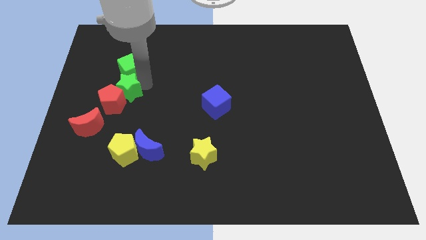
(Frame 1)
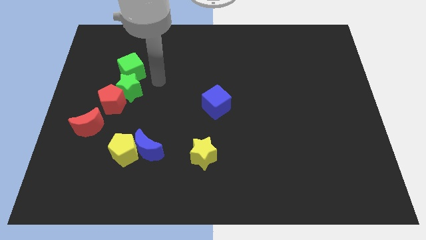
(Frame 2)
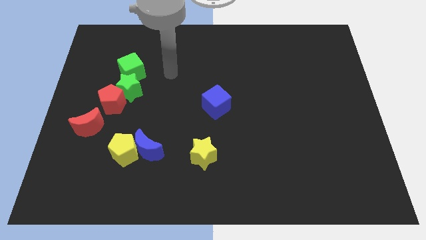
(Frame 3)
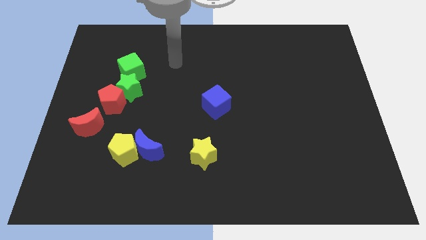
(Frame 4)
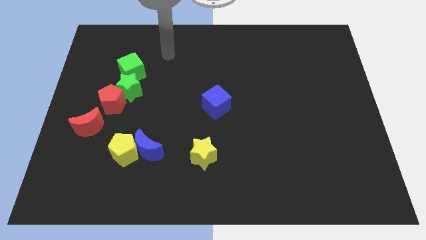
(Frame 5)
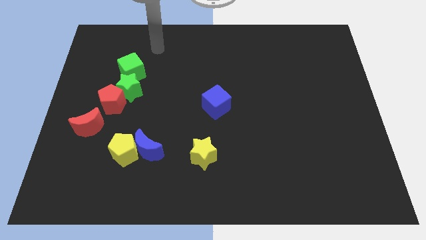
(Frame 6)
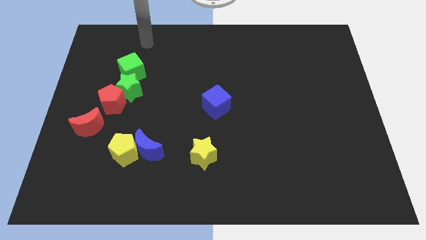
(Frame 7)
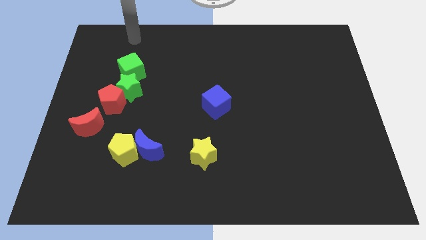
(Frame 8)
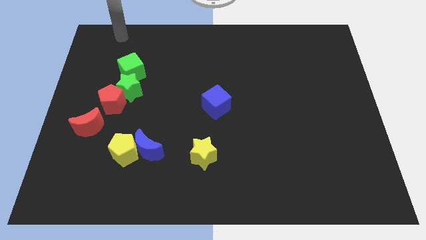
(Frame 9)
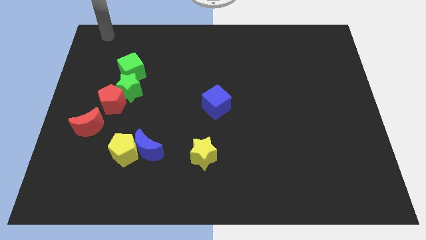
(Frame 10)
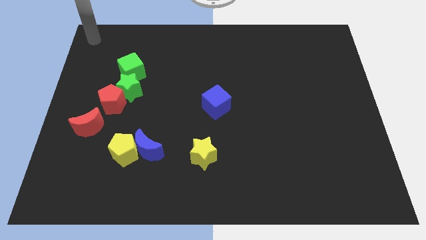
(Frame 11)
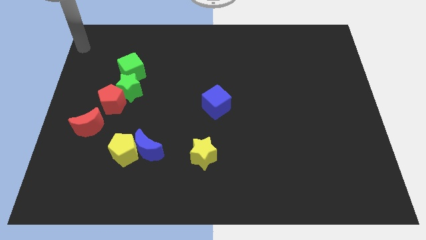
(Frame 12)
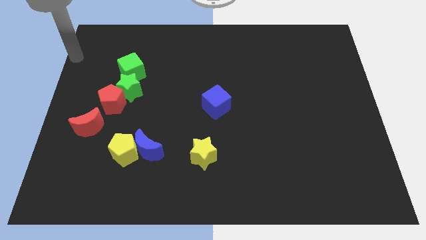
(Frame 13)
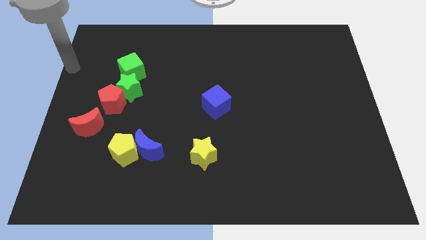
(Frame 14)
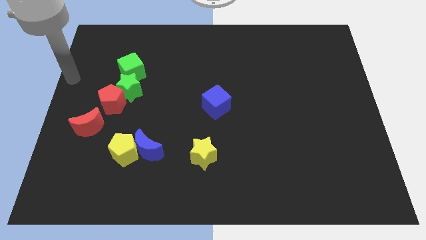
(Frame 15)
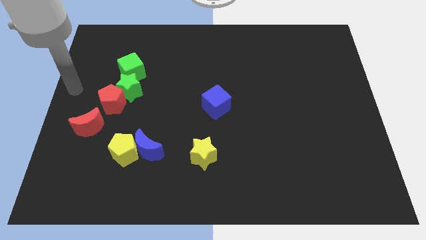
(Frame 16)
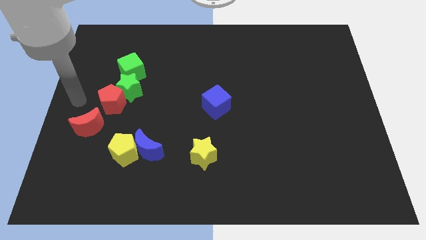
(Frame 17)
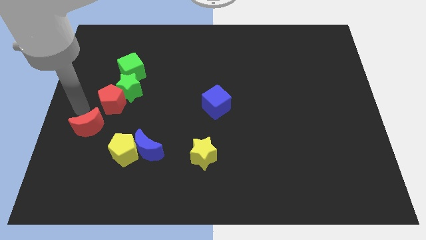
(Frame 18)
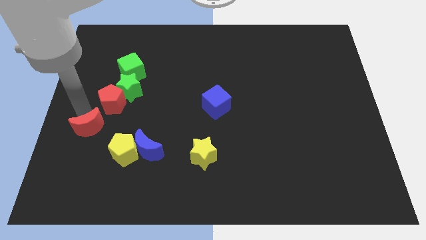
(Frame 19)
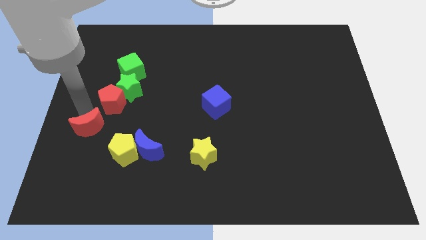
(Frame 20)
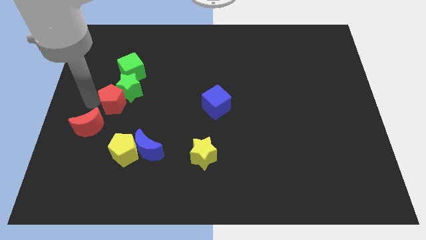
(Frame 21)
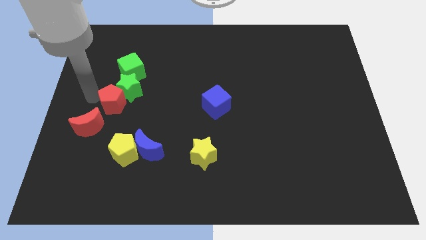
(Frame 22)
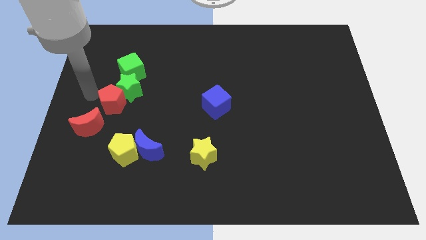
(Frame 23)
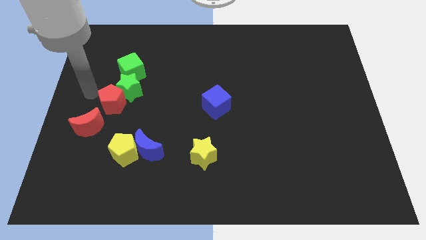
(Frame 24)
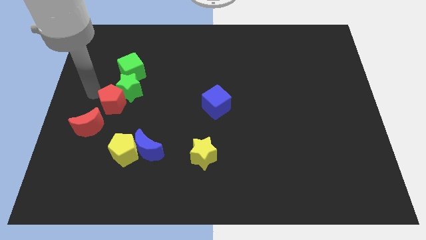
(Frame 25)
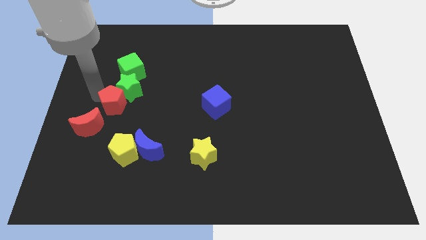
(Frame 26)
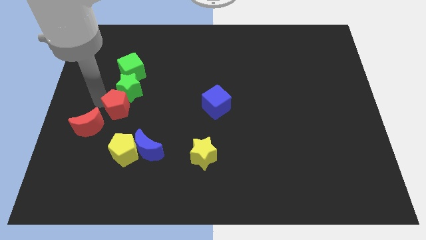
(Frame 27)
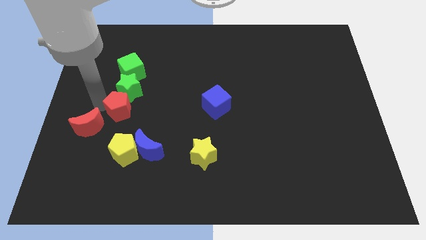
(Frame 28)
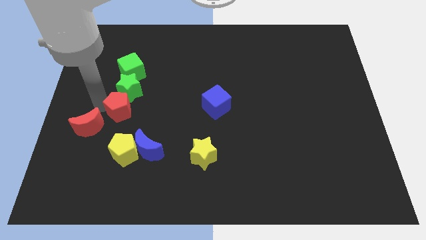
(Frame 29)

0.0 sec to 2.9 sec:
move your arm to the left of red pentagon

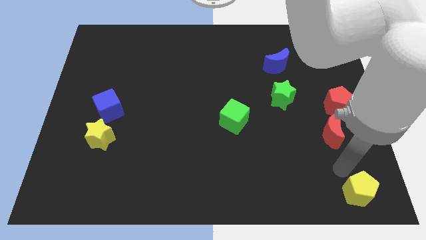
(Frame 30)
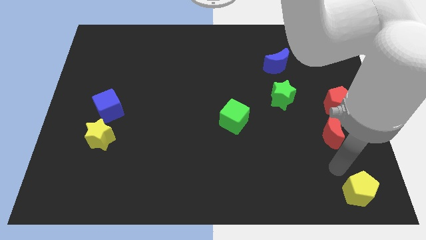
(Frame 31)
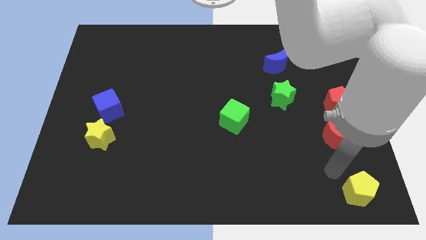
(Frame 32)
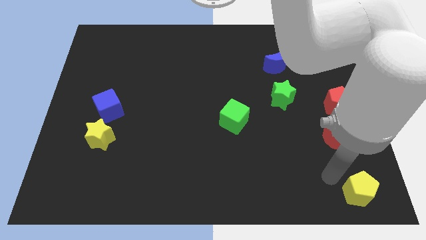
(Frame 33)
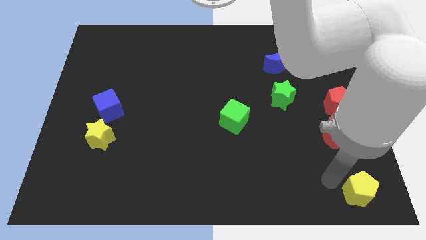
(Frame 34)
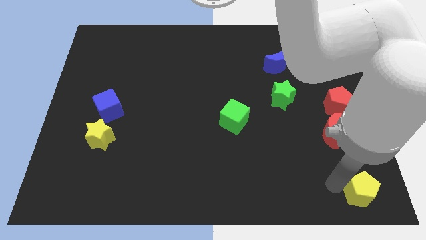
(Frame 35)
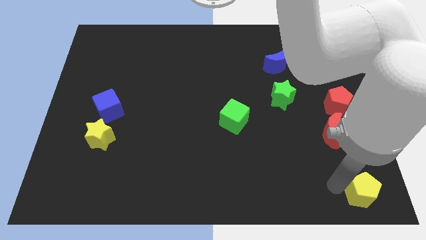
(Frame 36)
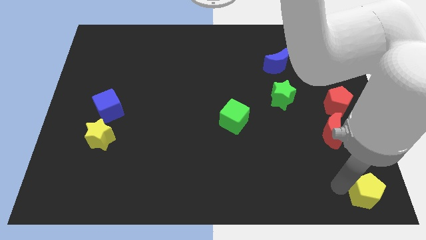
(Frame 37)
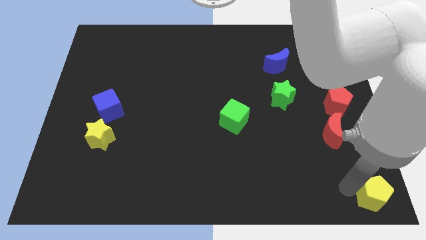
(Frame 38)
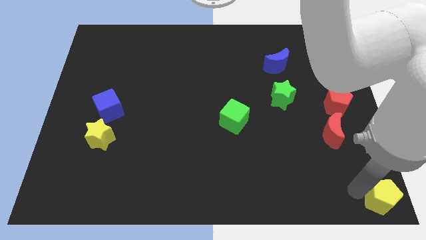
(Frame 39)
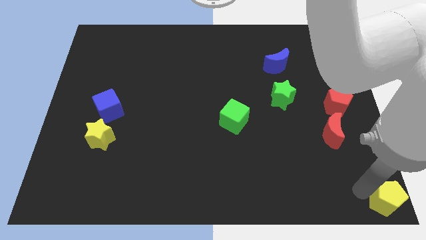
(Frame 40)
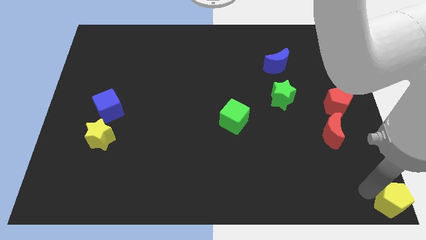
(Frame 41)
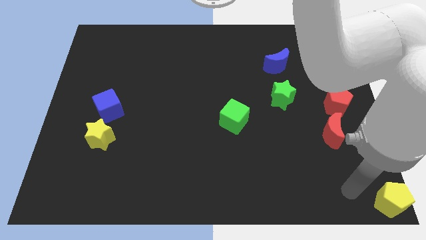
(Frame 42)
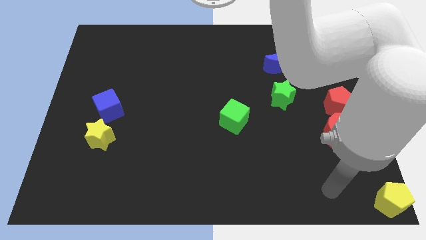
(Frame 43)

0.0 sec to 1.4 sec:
push the yellow pentagon to the bottom right corner of the board

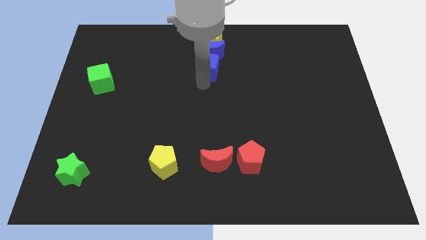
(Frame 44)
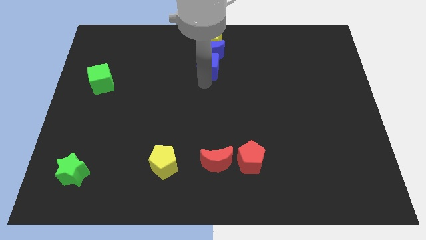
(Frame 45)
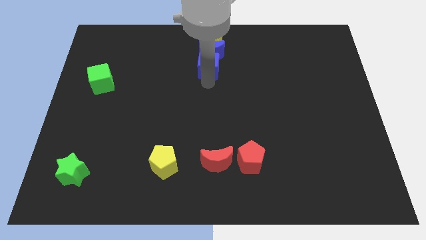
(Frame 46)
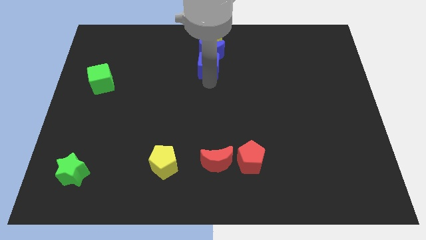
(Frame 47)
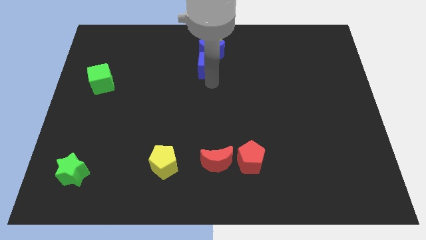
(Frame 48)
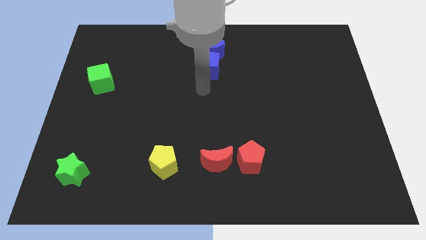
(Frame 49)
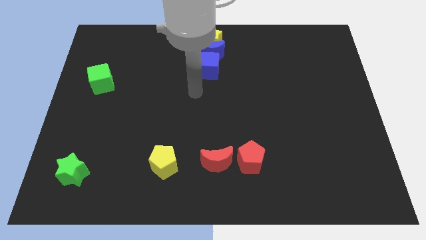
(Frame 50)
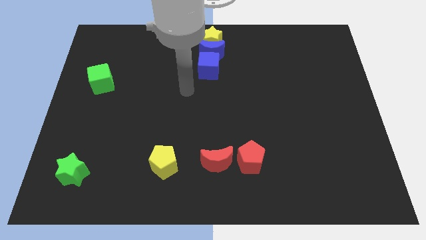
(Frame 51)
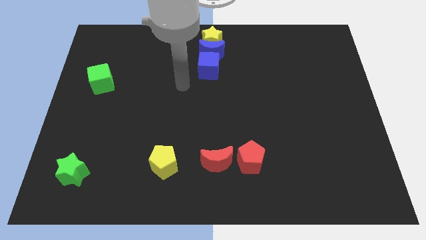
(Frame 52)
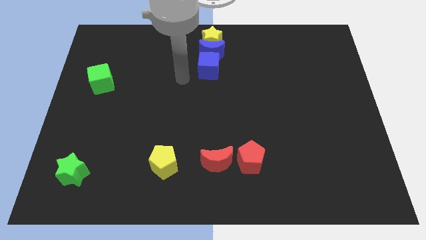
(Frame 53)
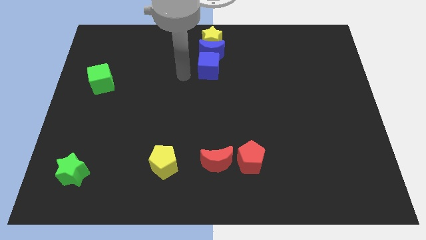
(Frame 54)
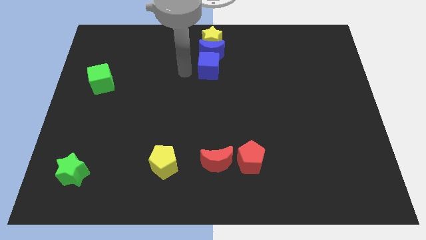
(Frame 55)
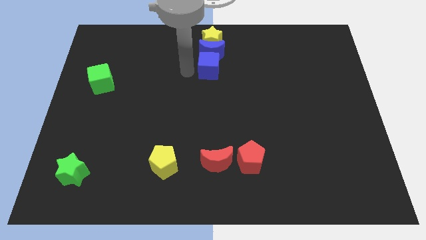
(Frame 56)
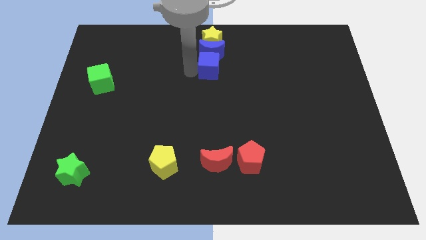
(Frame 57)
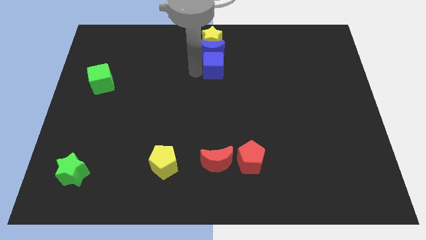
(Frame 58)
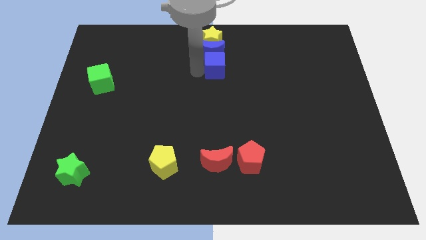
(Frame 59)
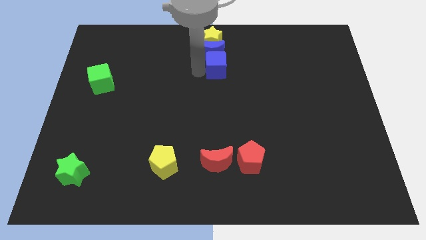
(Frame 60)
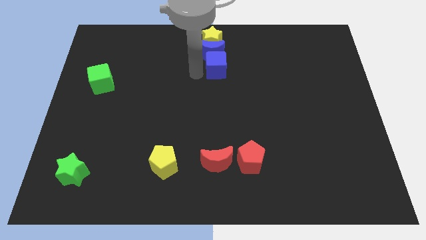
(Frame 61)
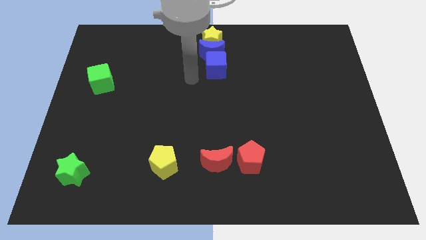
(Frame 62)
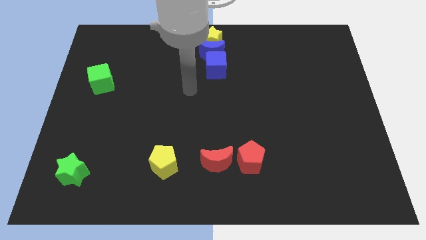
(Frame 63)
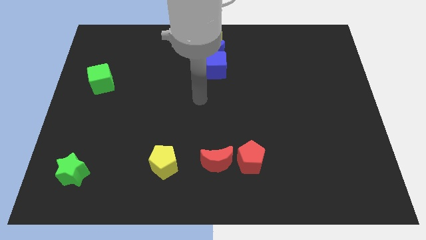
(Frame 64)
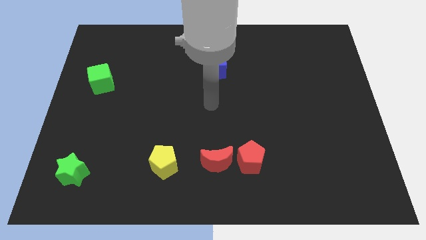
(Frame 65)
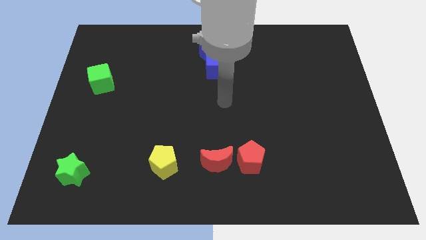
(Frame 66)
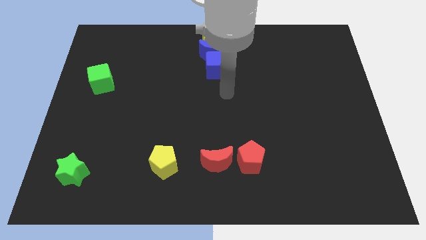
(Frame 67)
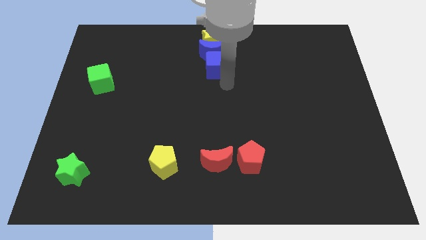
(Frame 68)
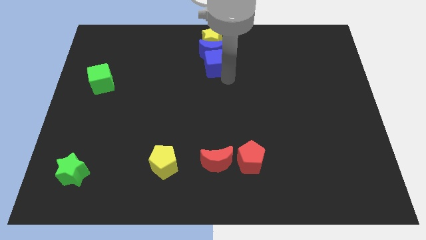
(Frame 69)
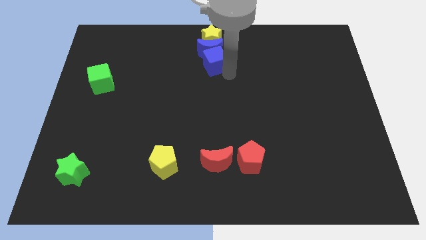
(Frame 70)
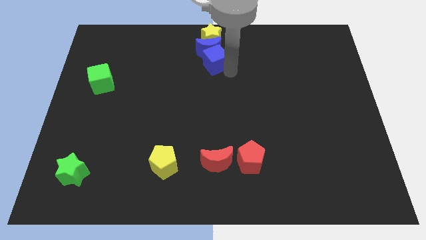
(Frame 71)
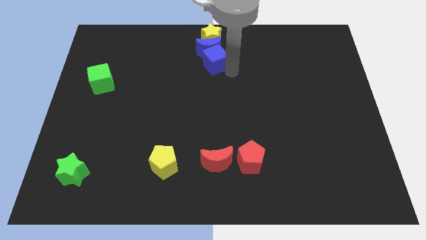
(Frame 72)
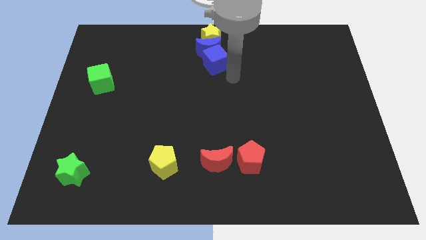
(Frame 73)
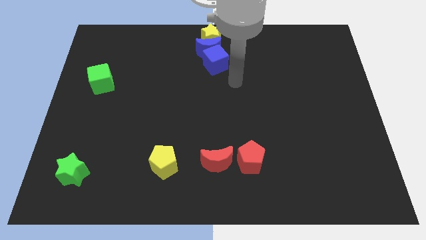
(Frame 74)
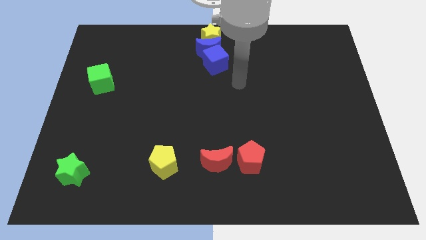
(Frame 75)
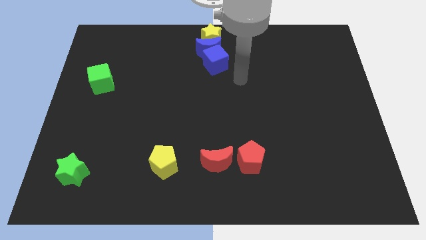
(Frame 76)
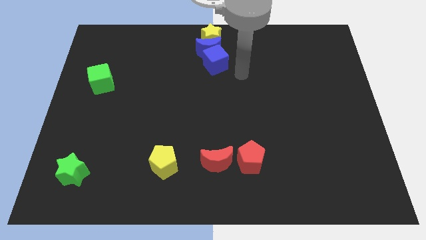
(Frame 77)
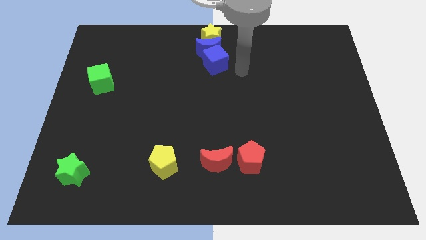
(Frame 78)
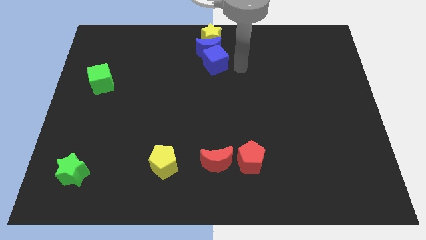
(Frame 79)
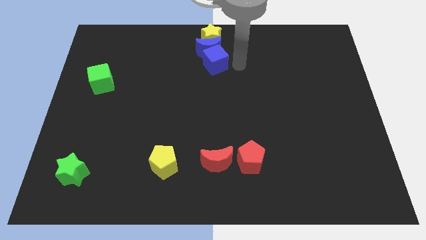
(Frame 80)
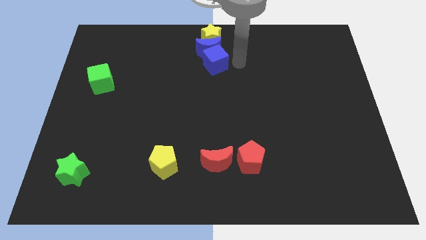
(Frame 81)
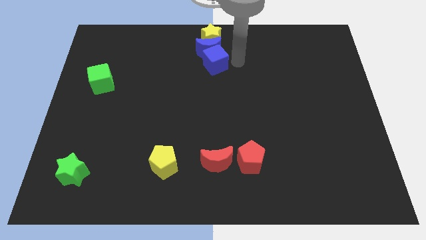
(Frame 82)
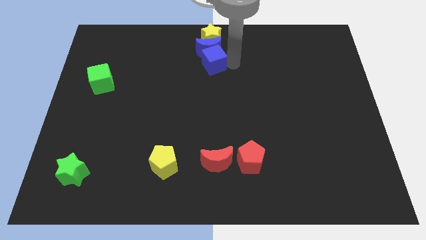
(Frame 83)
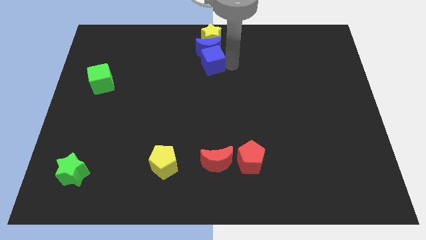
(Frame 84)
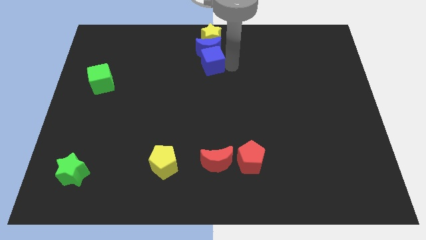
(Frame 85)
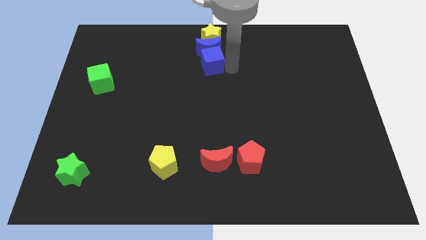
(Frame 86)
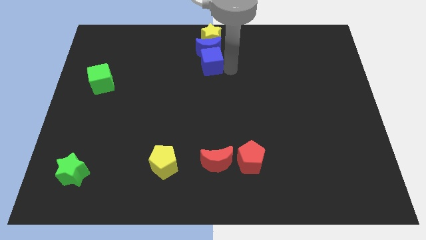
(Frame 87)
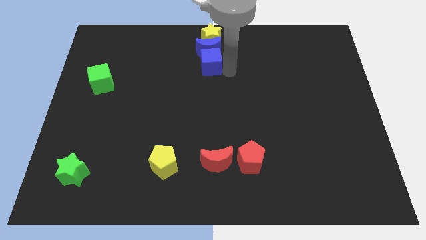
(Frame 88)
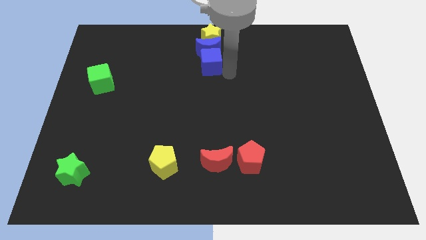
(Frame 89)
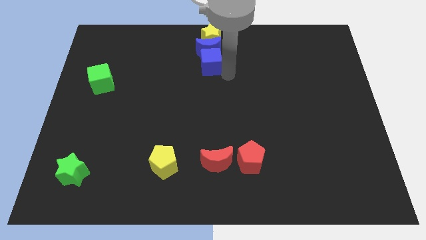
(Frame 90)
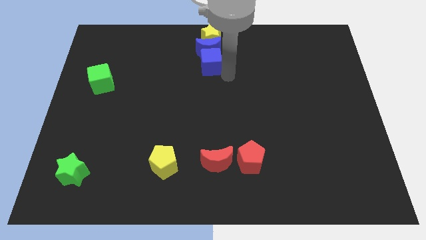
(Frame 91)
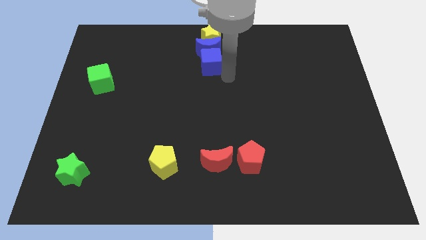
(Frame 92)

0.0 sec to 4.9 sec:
push a group of blocks to the top of the board
